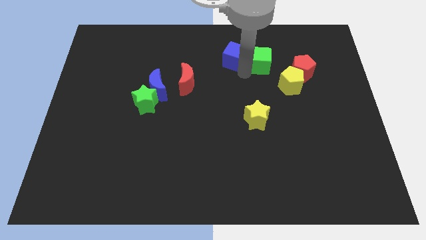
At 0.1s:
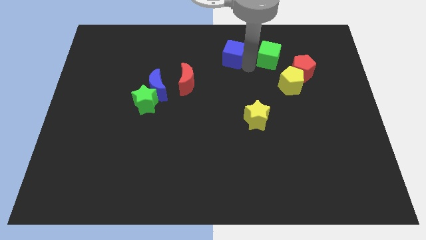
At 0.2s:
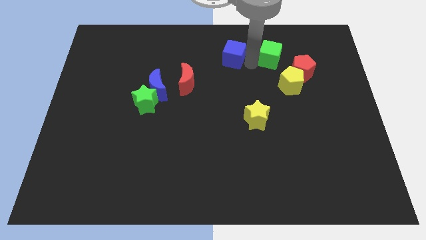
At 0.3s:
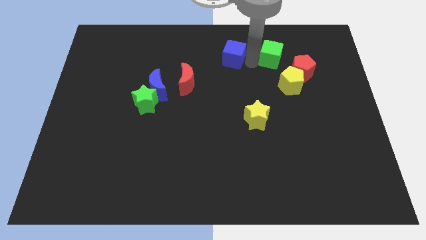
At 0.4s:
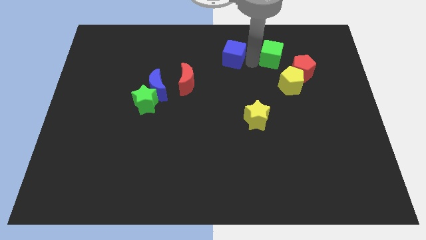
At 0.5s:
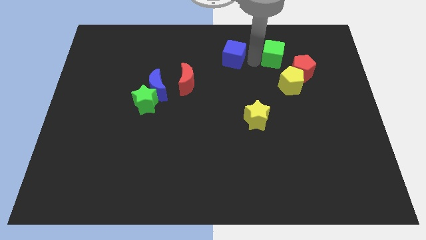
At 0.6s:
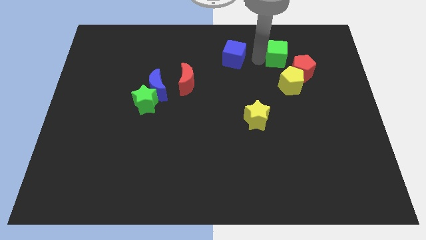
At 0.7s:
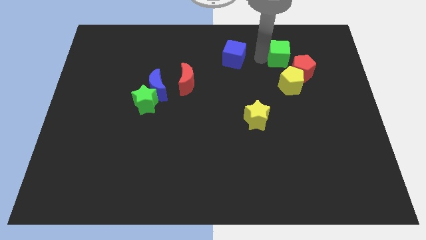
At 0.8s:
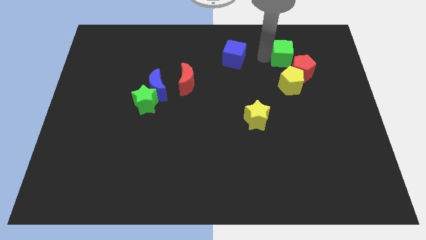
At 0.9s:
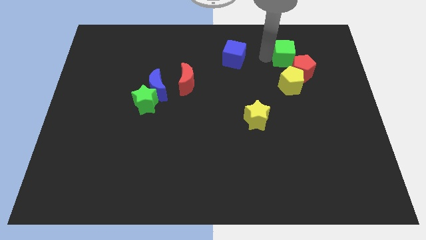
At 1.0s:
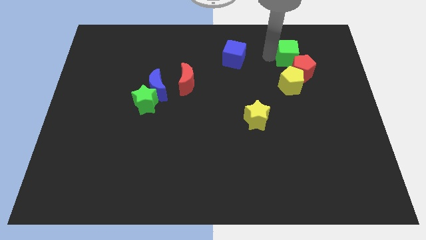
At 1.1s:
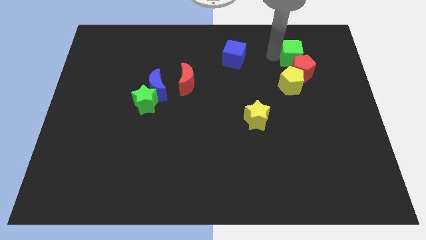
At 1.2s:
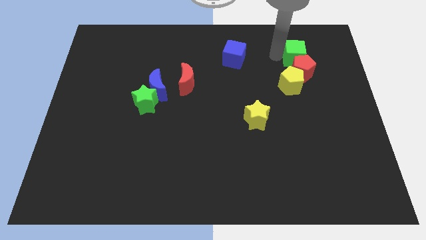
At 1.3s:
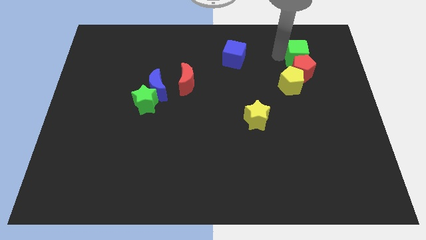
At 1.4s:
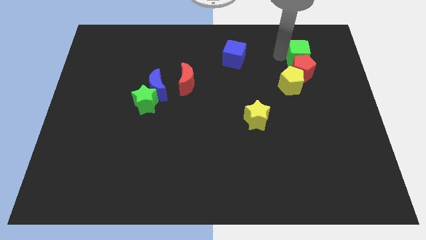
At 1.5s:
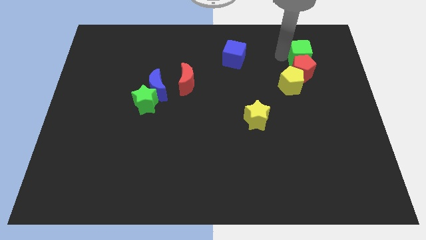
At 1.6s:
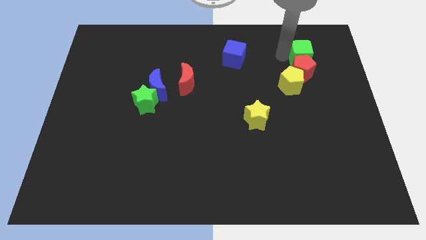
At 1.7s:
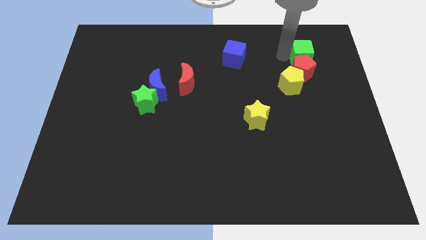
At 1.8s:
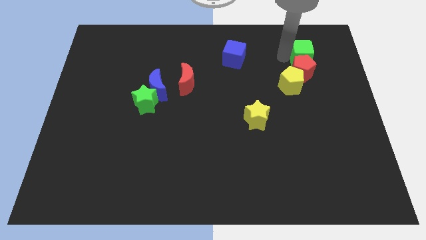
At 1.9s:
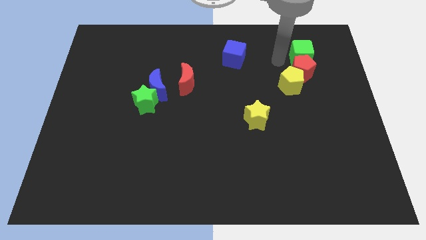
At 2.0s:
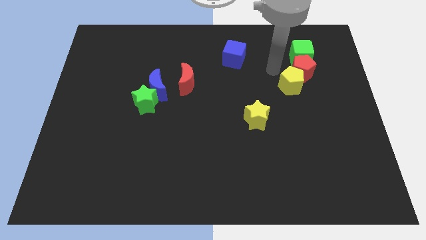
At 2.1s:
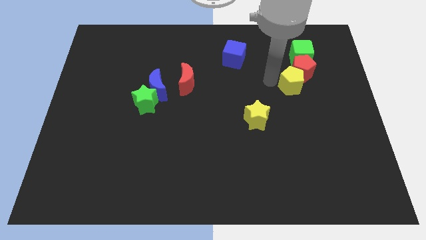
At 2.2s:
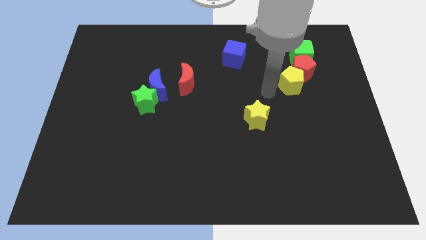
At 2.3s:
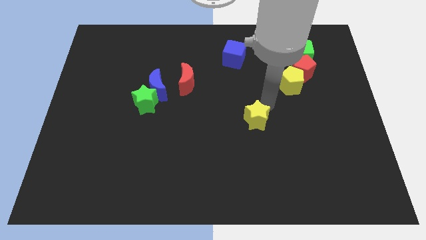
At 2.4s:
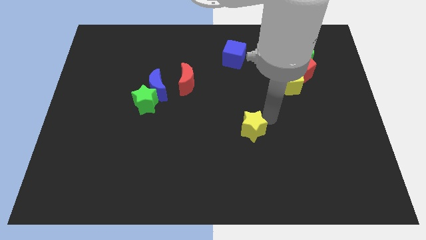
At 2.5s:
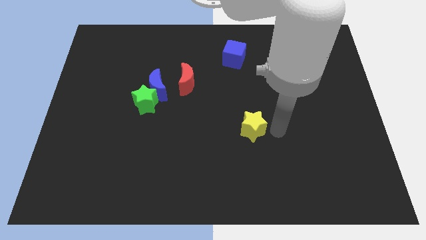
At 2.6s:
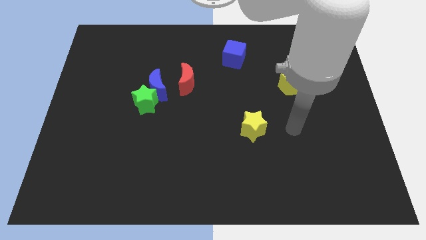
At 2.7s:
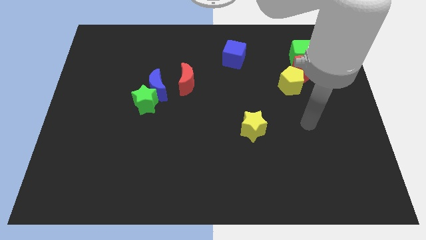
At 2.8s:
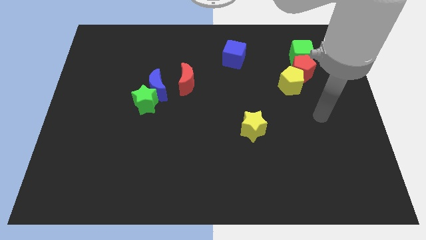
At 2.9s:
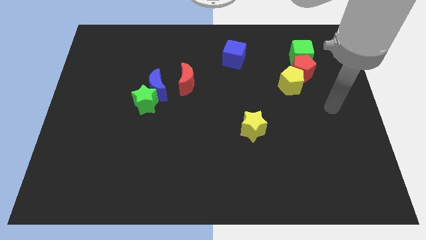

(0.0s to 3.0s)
push the green cube above the red pentagon

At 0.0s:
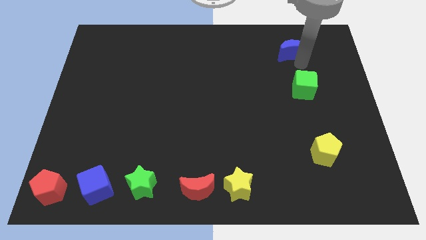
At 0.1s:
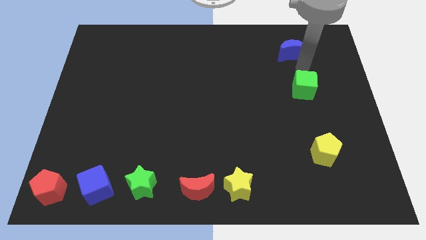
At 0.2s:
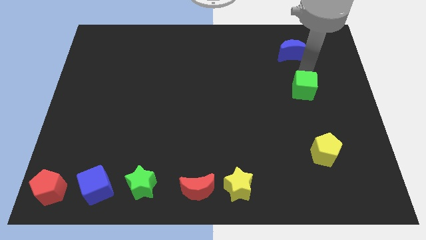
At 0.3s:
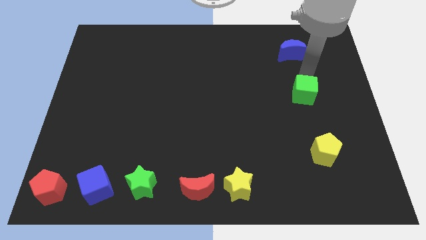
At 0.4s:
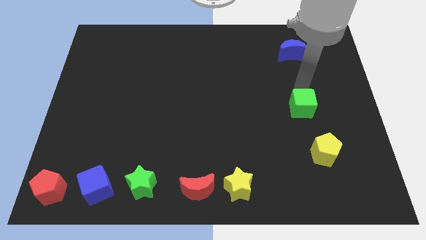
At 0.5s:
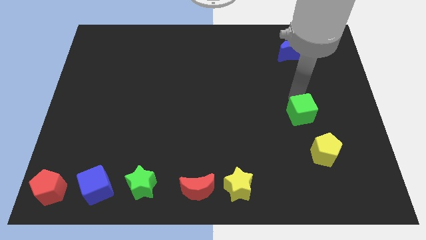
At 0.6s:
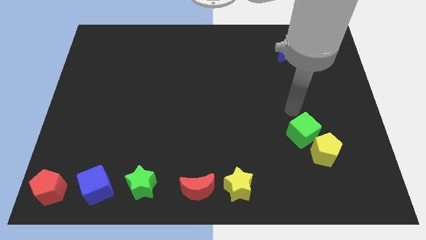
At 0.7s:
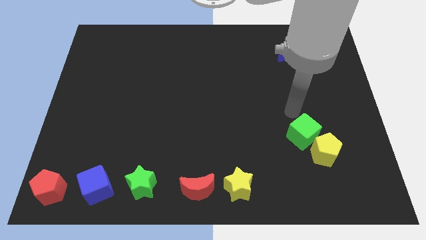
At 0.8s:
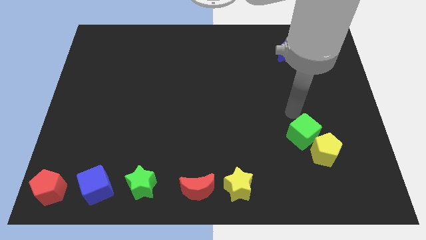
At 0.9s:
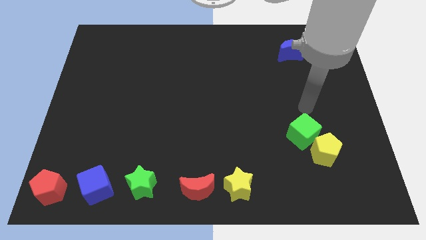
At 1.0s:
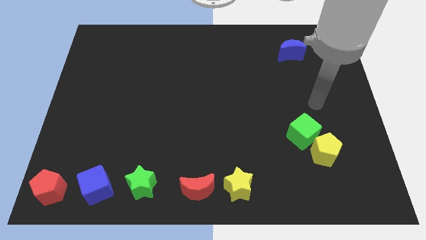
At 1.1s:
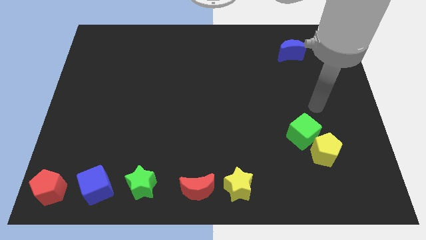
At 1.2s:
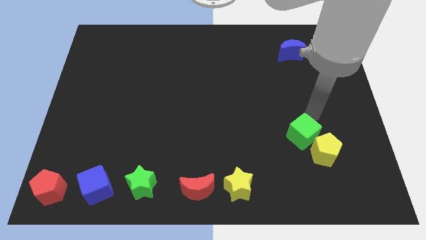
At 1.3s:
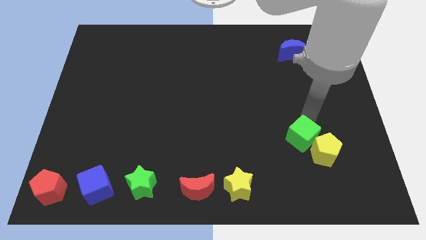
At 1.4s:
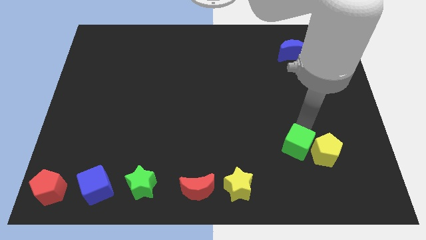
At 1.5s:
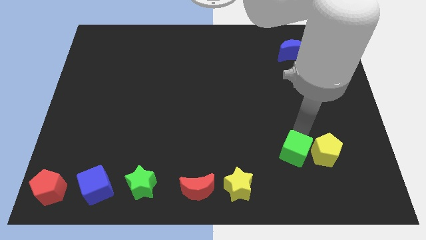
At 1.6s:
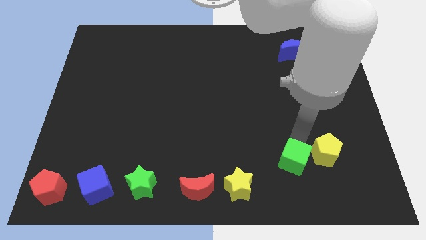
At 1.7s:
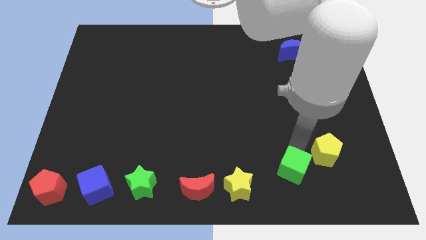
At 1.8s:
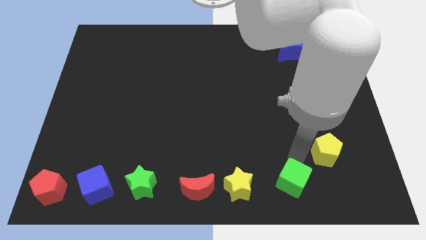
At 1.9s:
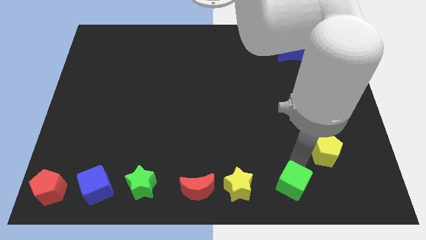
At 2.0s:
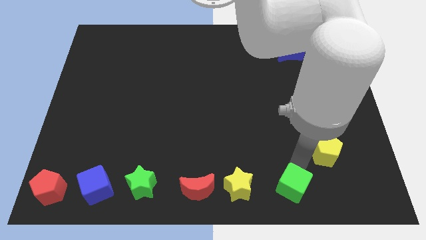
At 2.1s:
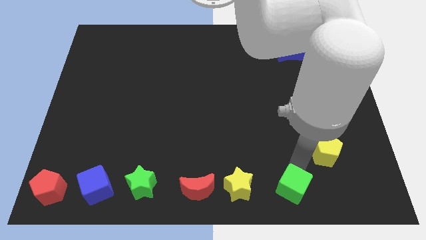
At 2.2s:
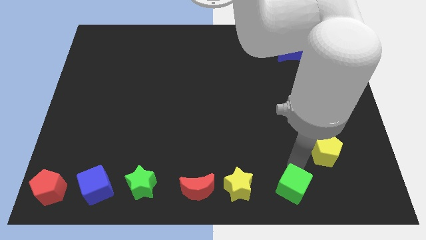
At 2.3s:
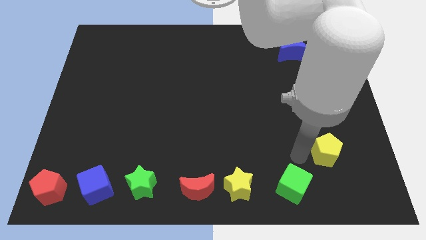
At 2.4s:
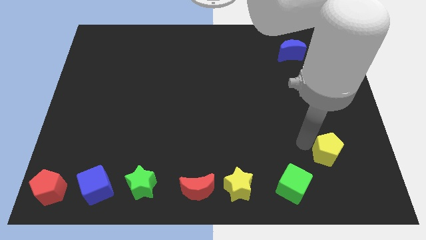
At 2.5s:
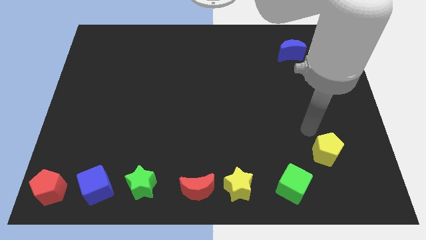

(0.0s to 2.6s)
place green cube to the right of yellow star

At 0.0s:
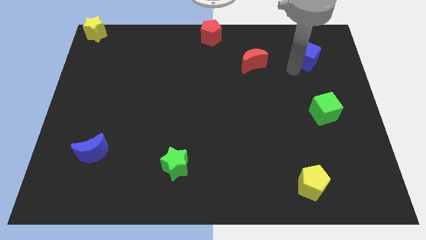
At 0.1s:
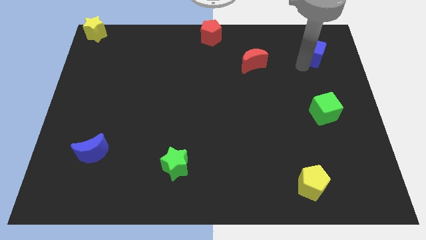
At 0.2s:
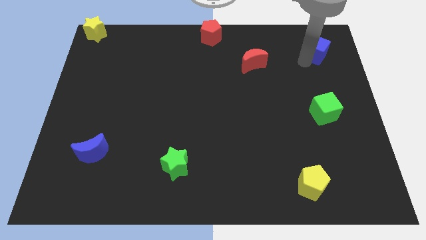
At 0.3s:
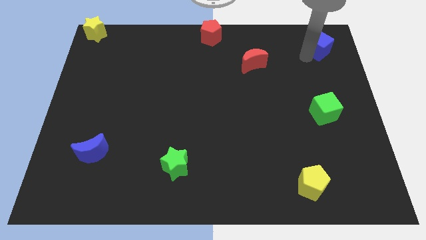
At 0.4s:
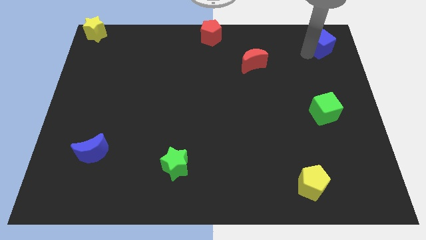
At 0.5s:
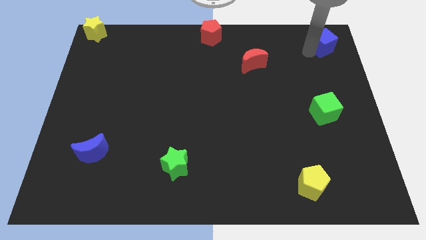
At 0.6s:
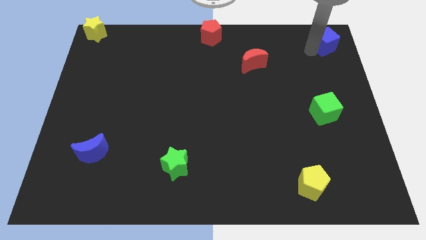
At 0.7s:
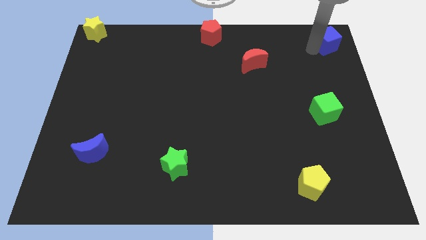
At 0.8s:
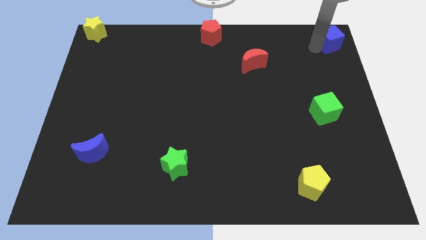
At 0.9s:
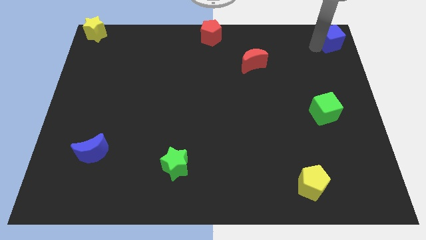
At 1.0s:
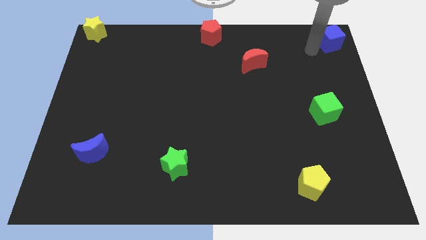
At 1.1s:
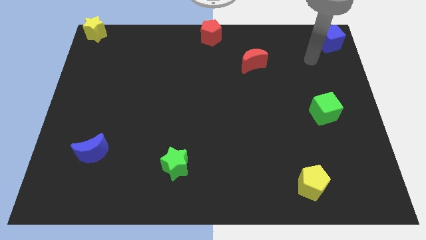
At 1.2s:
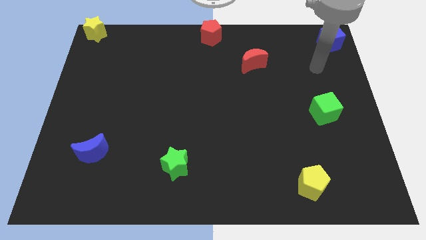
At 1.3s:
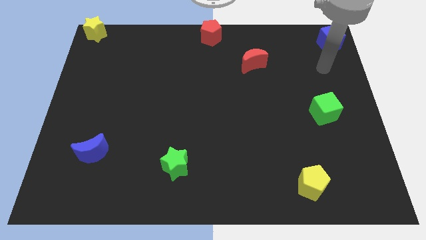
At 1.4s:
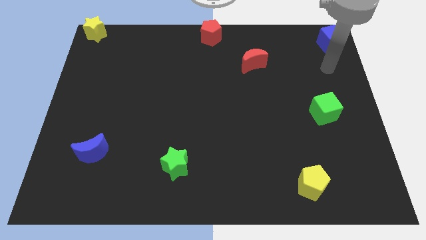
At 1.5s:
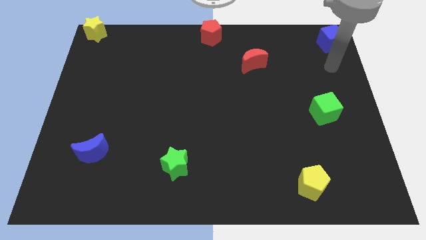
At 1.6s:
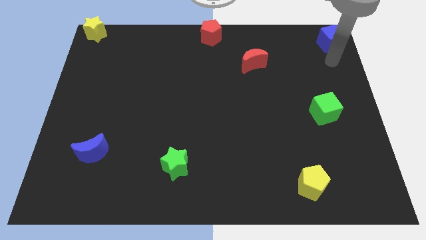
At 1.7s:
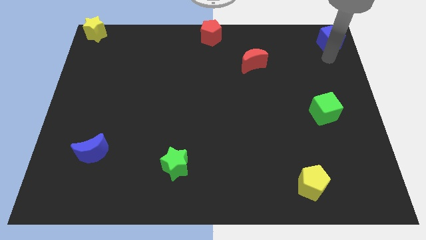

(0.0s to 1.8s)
push the blue cube to the top right corner of the board

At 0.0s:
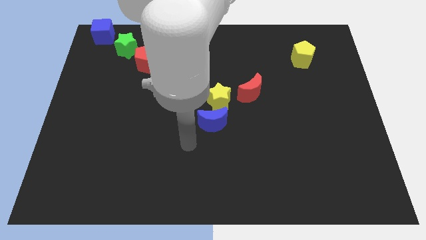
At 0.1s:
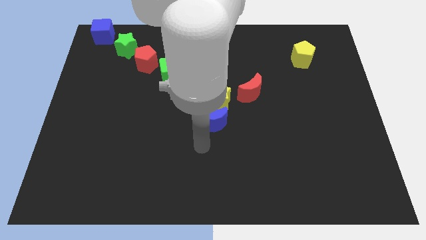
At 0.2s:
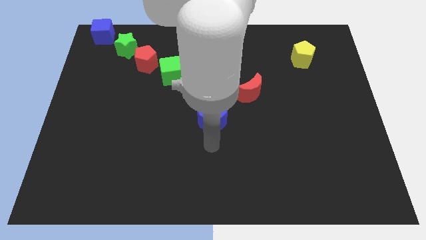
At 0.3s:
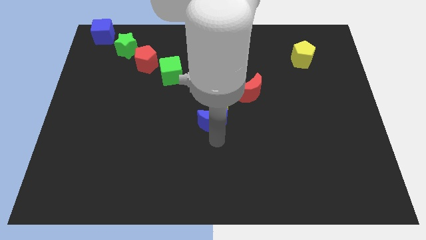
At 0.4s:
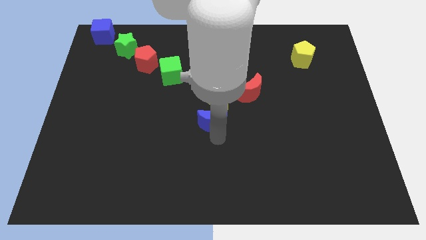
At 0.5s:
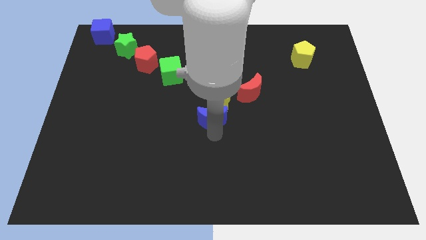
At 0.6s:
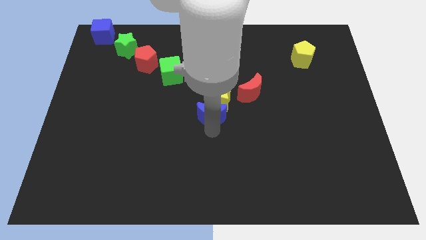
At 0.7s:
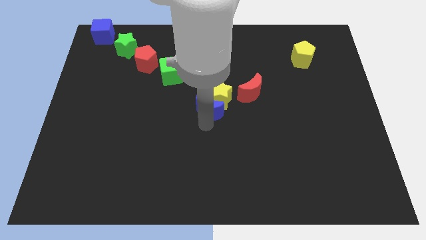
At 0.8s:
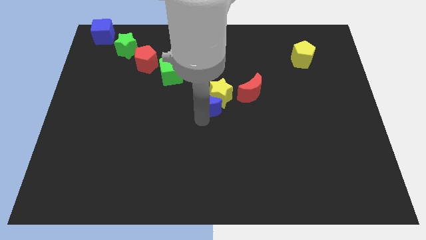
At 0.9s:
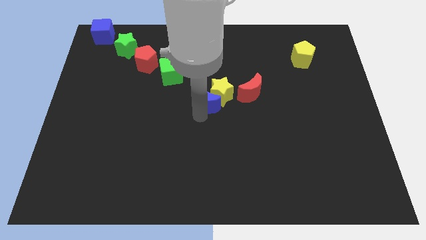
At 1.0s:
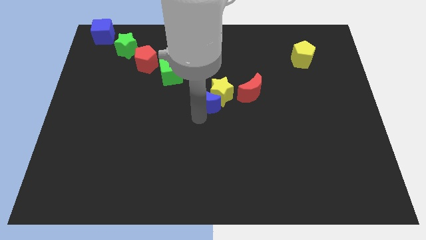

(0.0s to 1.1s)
push blue crescent in to yellow star

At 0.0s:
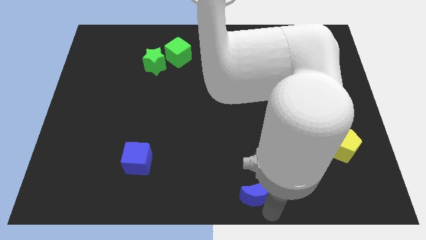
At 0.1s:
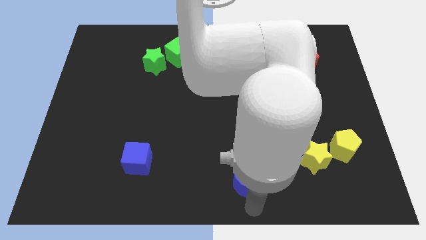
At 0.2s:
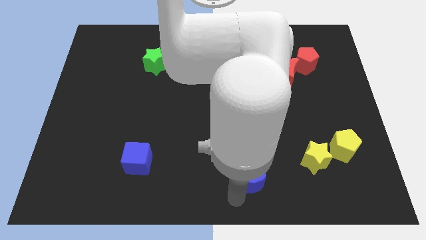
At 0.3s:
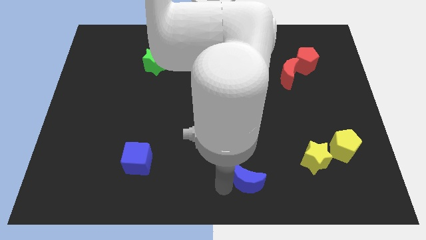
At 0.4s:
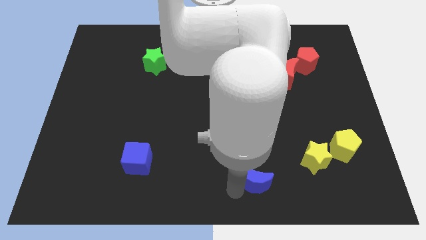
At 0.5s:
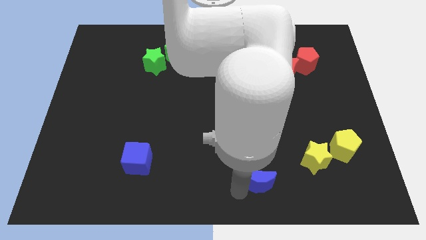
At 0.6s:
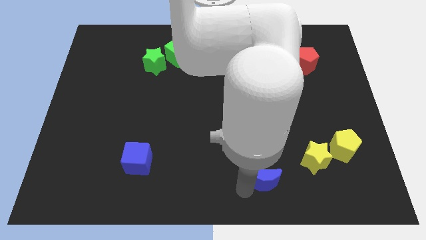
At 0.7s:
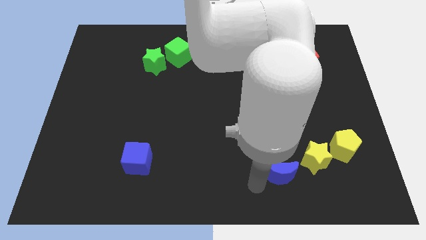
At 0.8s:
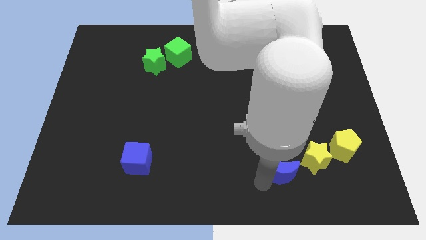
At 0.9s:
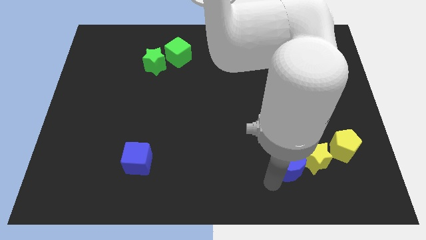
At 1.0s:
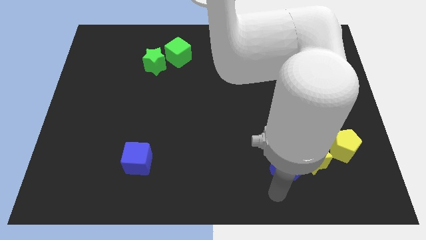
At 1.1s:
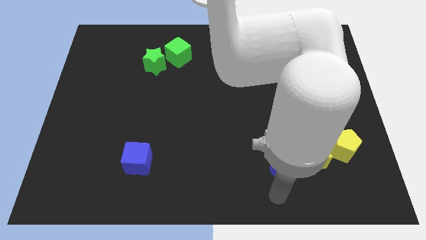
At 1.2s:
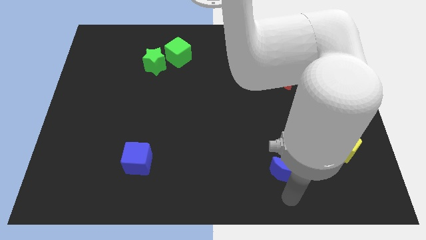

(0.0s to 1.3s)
push the blue crescent close to the yellow star
